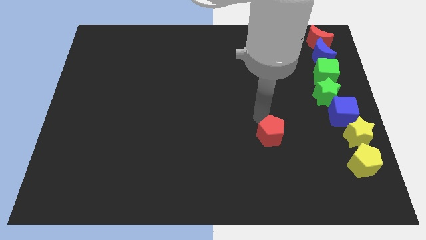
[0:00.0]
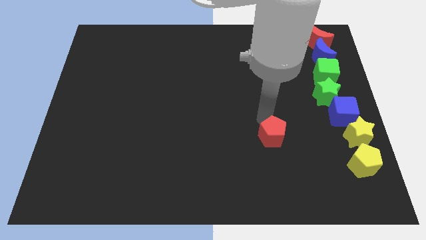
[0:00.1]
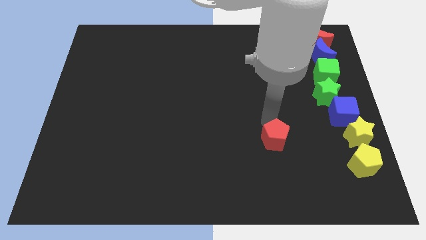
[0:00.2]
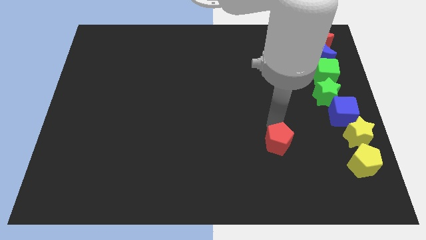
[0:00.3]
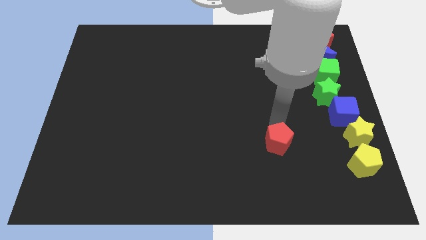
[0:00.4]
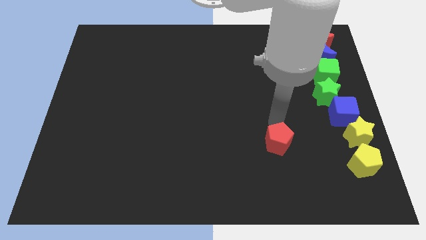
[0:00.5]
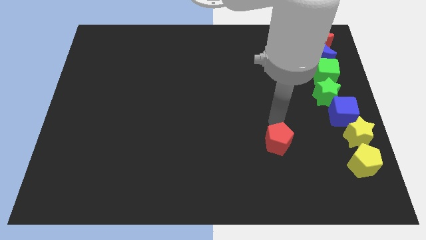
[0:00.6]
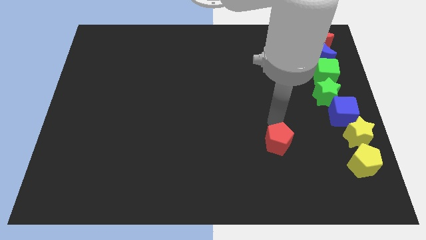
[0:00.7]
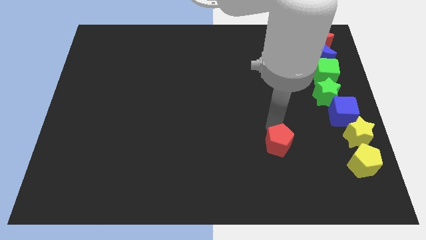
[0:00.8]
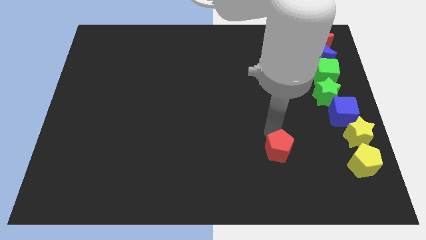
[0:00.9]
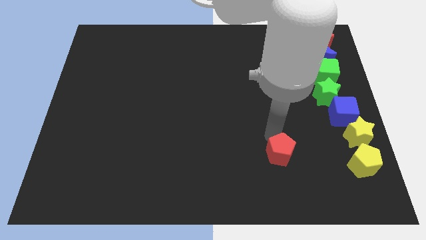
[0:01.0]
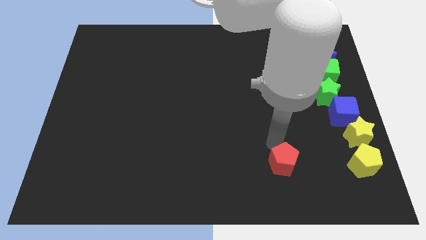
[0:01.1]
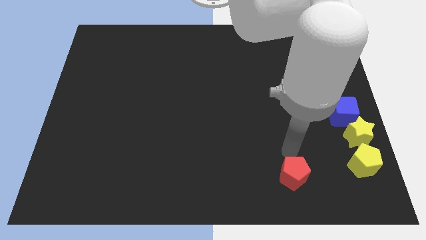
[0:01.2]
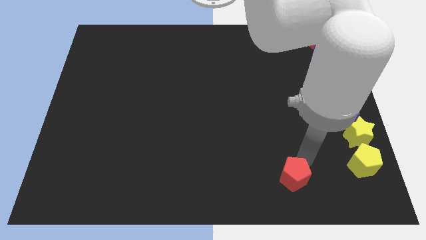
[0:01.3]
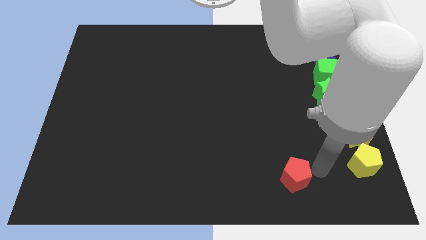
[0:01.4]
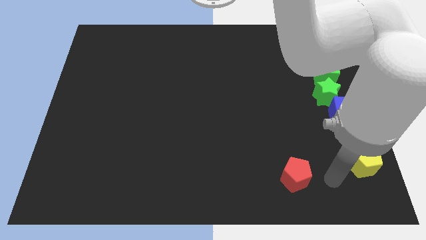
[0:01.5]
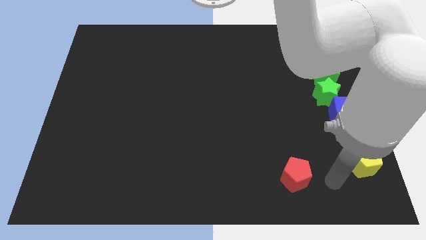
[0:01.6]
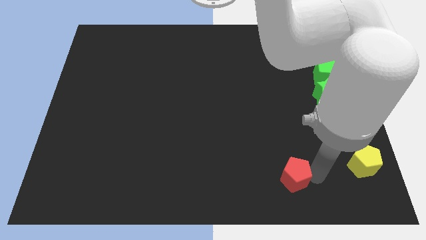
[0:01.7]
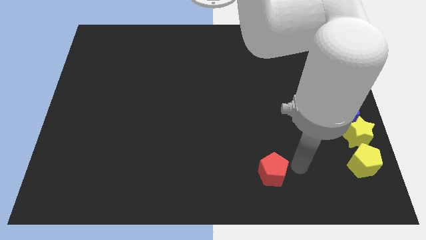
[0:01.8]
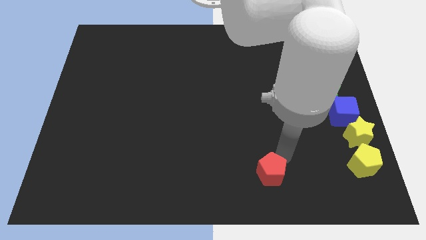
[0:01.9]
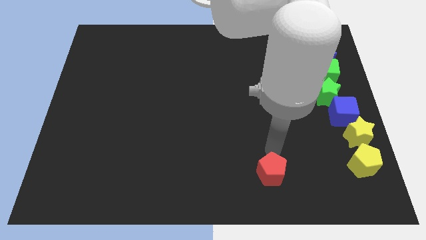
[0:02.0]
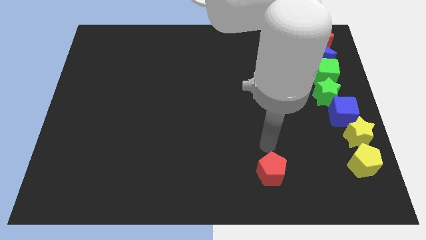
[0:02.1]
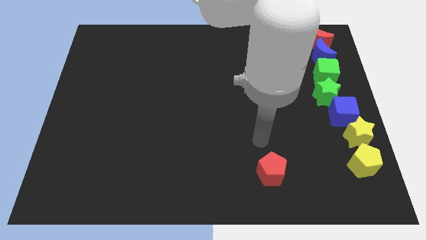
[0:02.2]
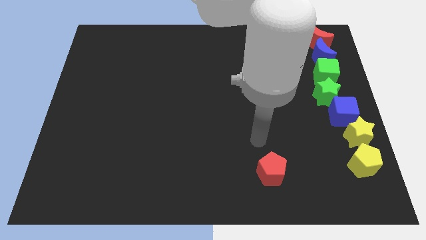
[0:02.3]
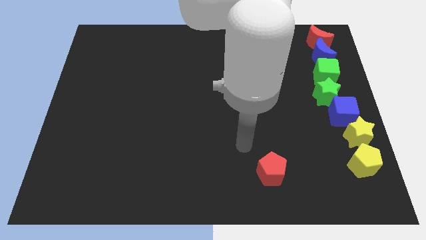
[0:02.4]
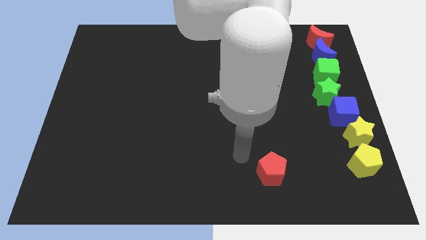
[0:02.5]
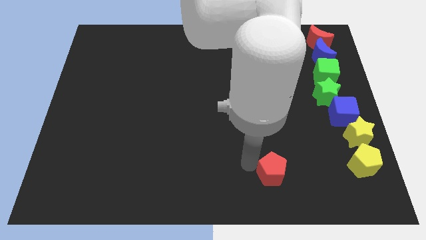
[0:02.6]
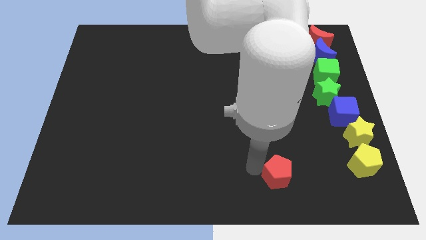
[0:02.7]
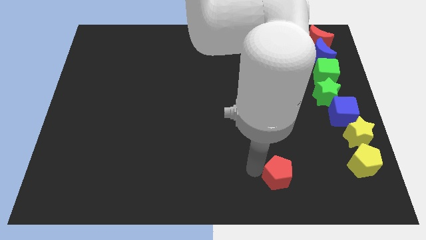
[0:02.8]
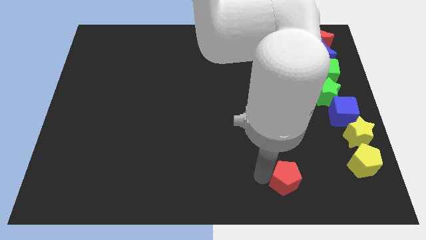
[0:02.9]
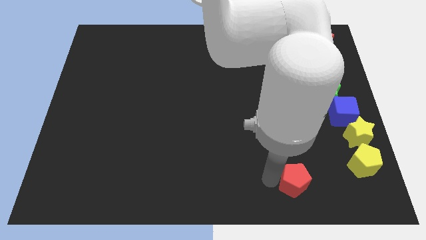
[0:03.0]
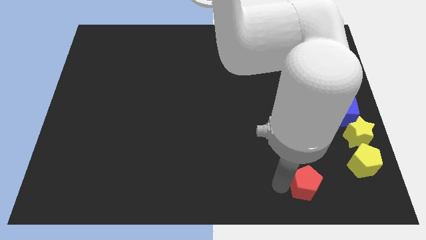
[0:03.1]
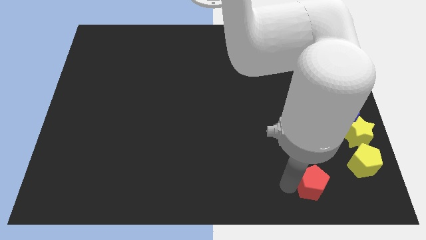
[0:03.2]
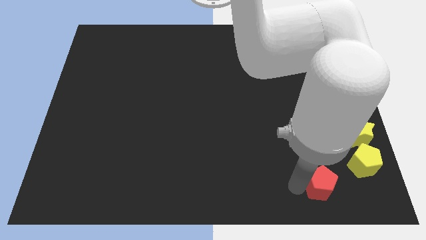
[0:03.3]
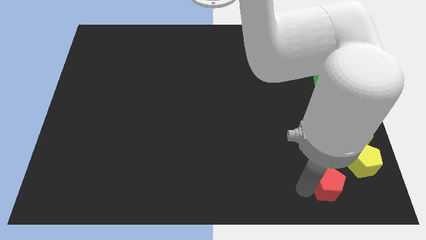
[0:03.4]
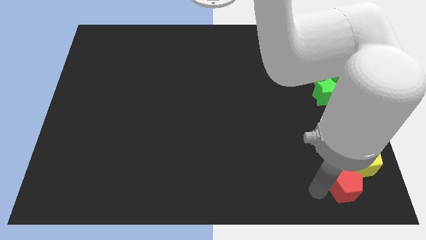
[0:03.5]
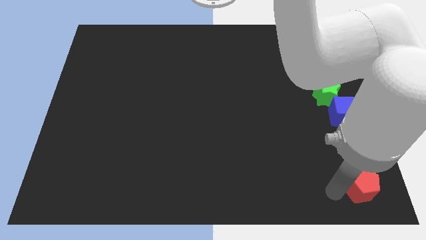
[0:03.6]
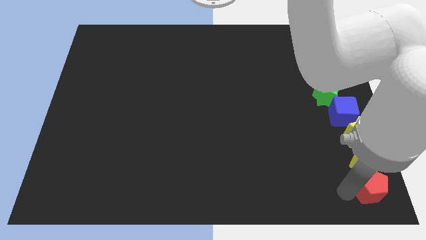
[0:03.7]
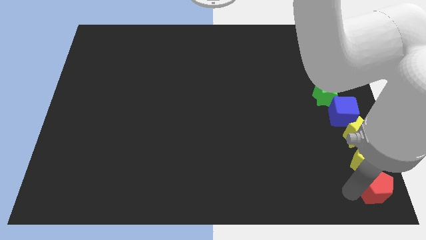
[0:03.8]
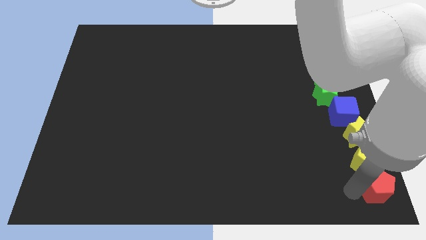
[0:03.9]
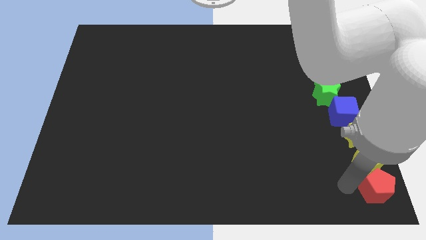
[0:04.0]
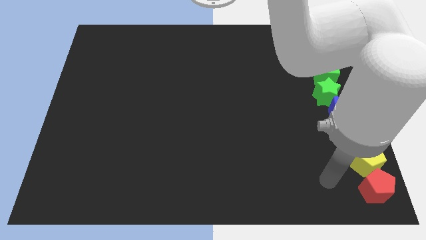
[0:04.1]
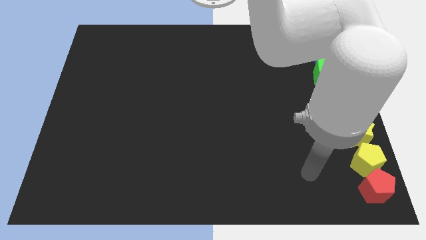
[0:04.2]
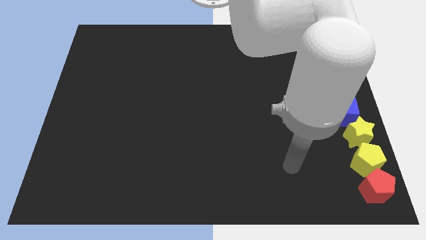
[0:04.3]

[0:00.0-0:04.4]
place red pentagon below yellow pentagon

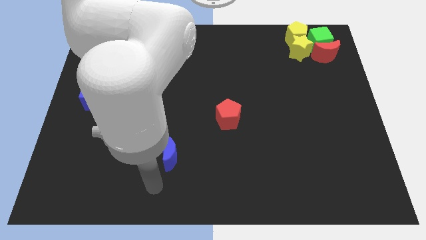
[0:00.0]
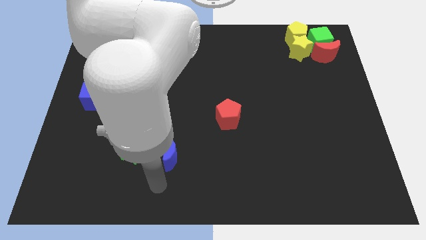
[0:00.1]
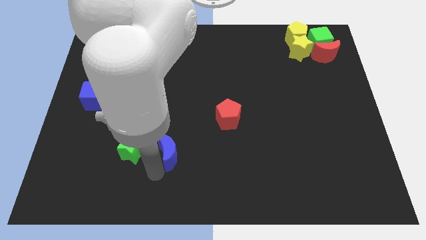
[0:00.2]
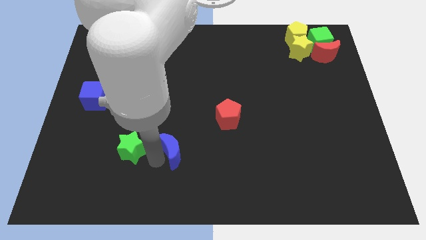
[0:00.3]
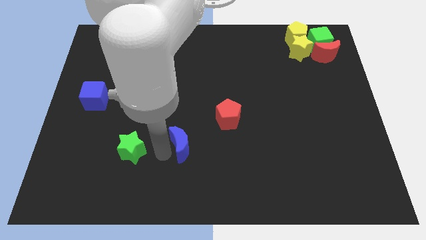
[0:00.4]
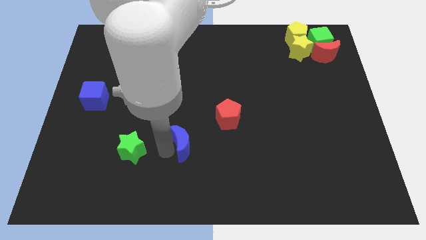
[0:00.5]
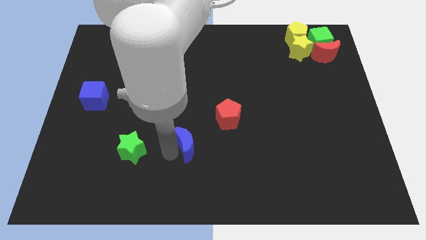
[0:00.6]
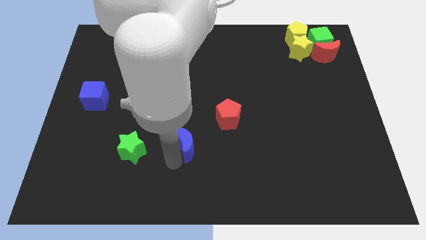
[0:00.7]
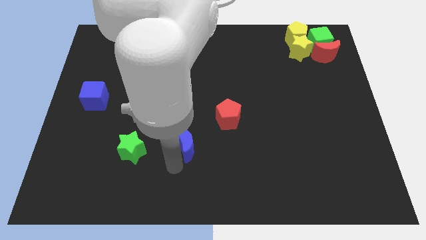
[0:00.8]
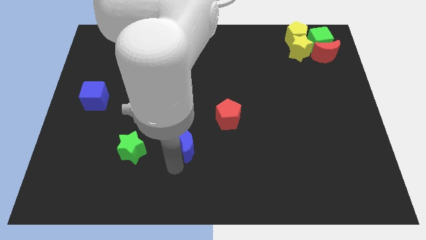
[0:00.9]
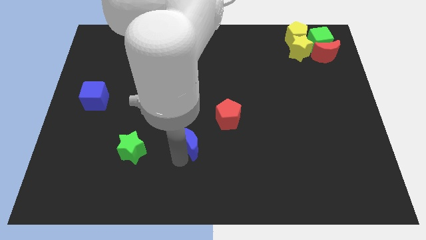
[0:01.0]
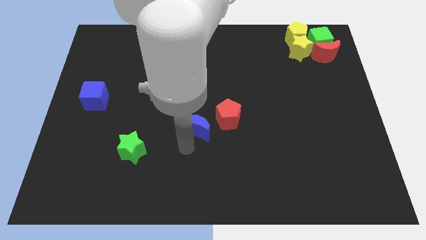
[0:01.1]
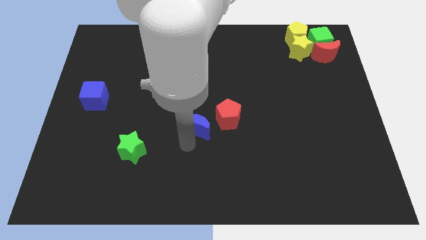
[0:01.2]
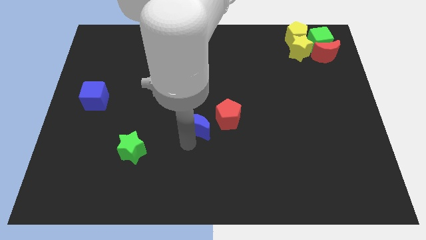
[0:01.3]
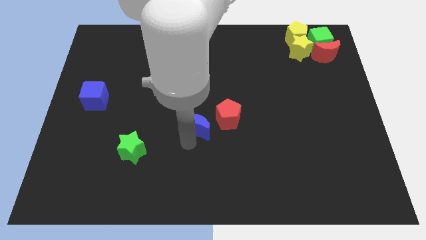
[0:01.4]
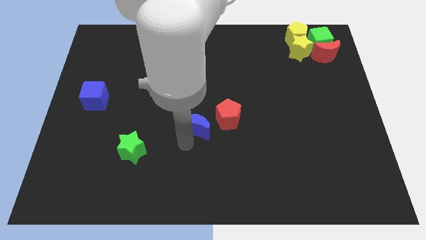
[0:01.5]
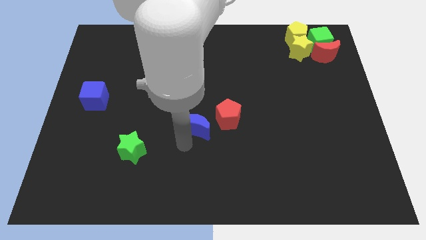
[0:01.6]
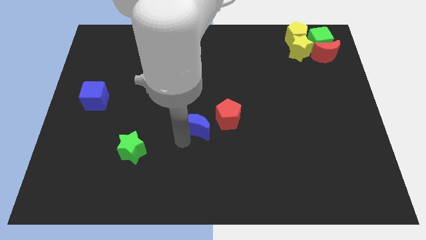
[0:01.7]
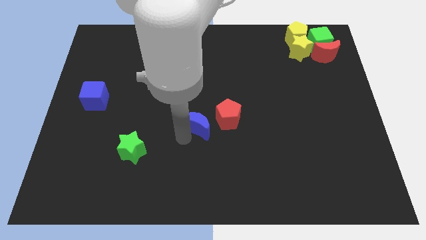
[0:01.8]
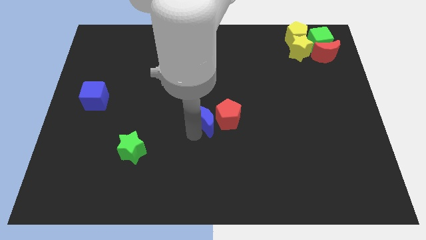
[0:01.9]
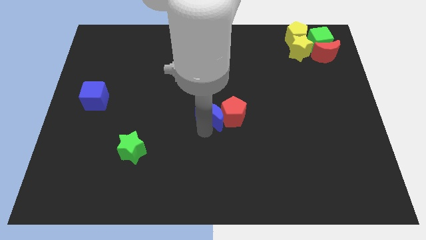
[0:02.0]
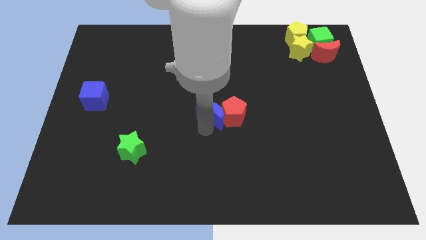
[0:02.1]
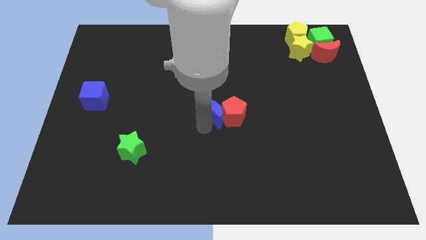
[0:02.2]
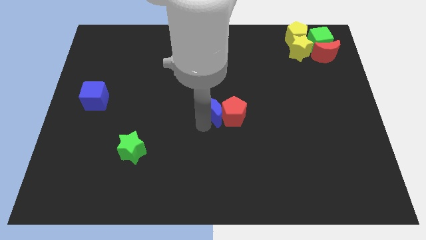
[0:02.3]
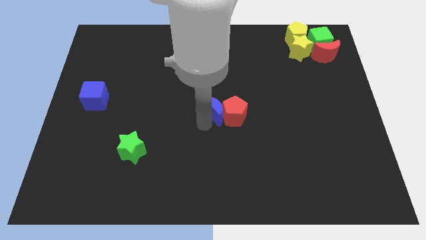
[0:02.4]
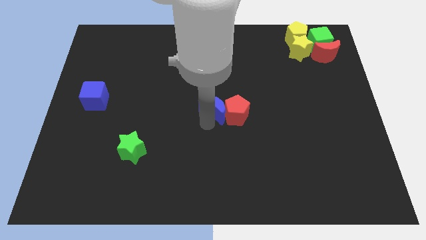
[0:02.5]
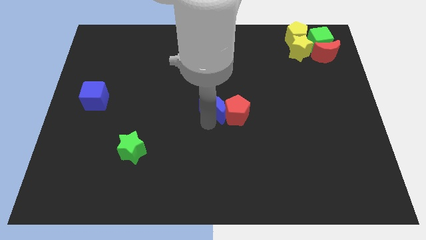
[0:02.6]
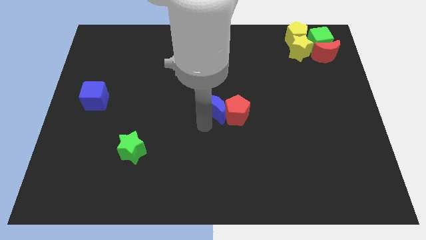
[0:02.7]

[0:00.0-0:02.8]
push blue crescent into the red pentagon

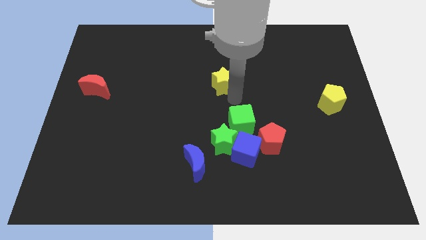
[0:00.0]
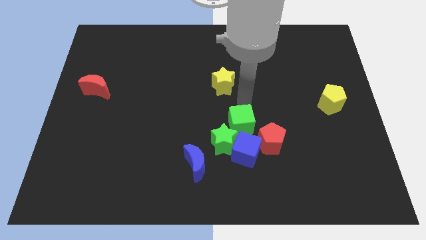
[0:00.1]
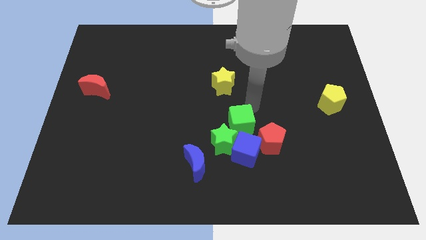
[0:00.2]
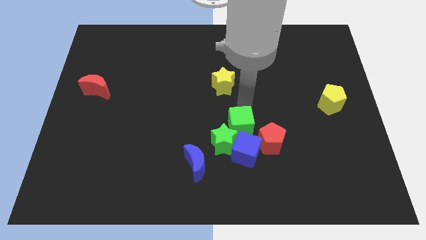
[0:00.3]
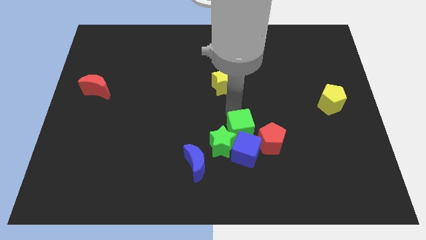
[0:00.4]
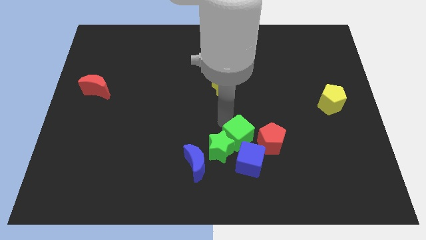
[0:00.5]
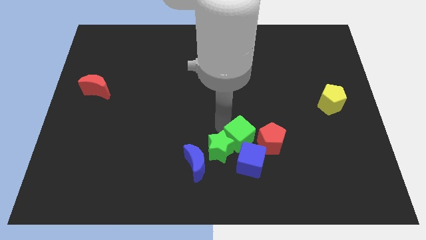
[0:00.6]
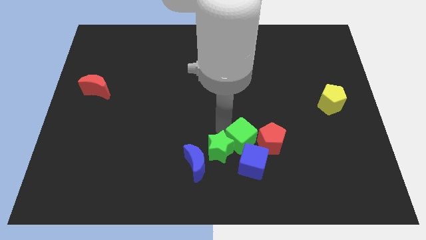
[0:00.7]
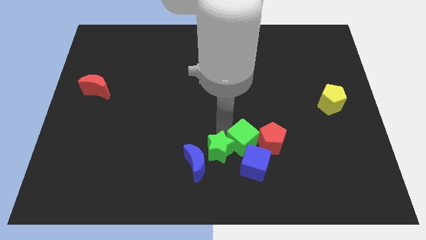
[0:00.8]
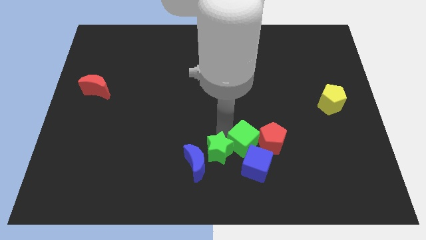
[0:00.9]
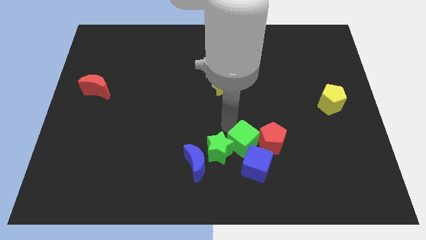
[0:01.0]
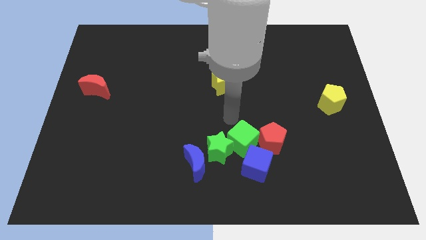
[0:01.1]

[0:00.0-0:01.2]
place the green cube in between green star and red pentagon

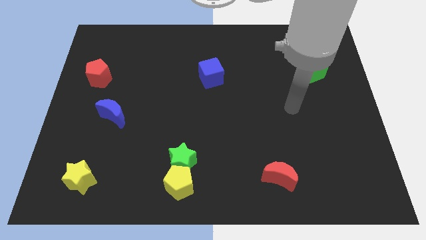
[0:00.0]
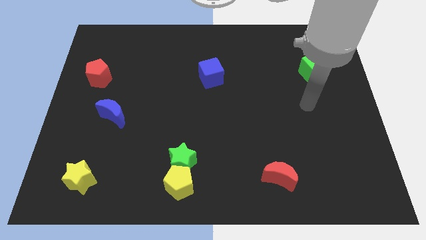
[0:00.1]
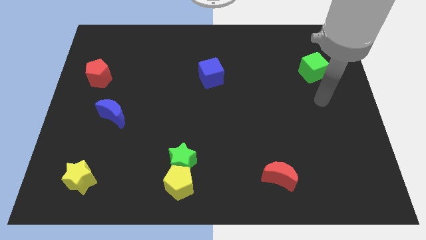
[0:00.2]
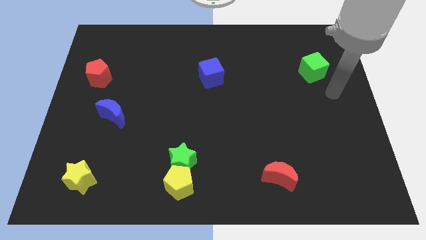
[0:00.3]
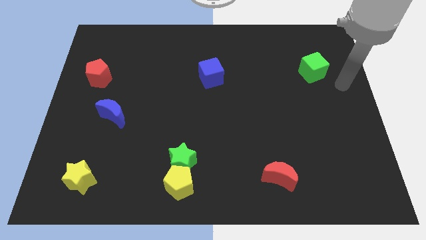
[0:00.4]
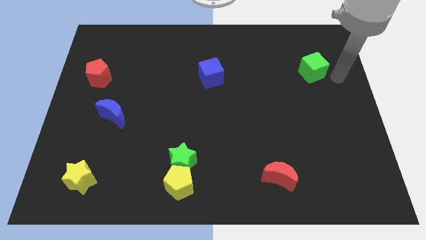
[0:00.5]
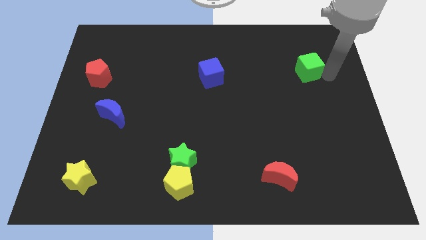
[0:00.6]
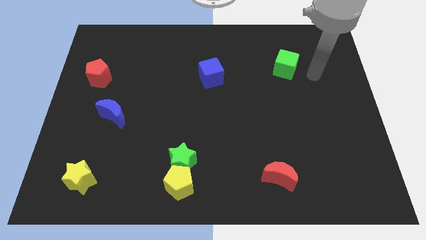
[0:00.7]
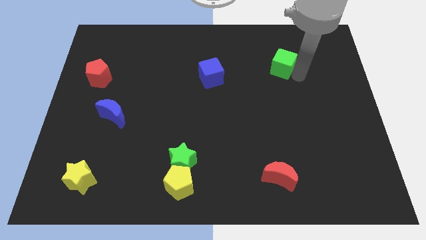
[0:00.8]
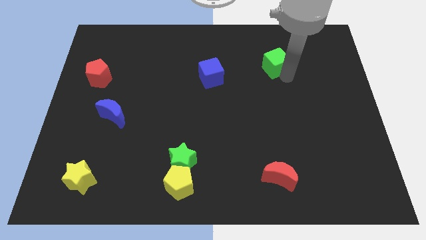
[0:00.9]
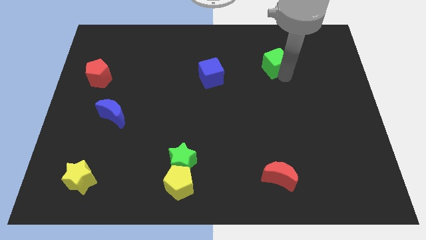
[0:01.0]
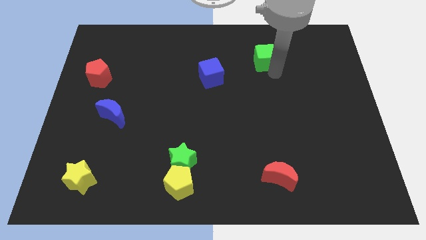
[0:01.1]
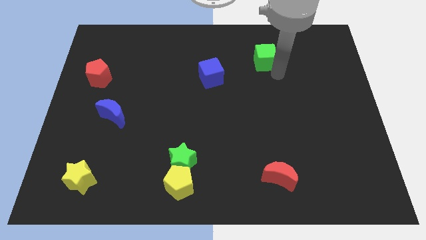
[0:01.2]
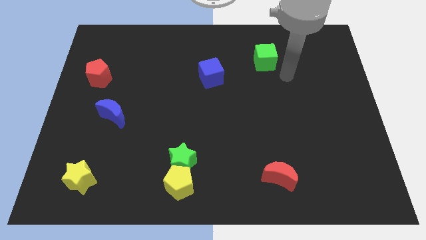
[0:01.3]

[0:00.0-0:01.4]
move the green cube to the top right side of the blue cube
